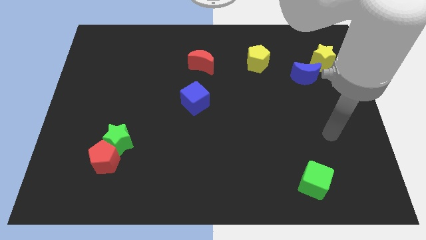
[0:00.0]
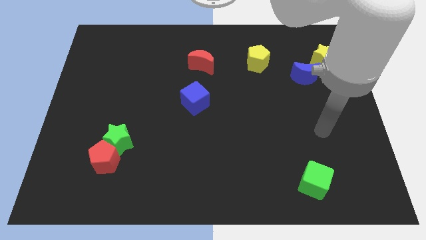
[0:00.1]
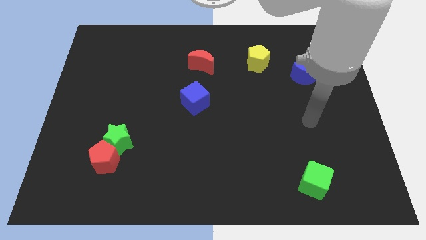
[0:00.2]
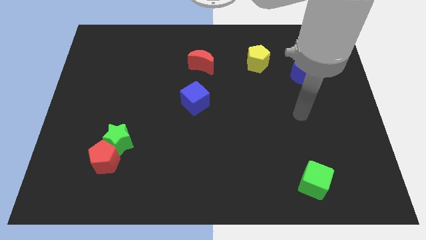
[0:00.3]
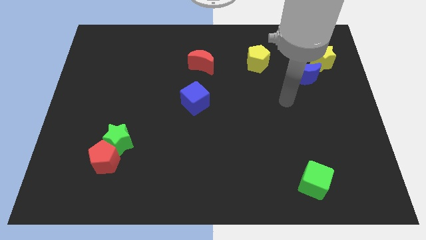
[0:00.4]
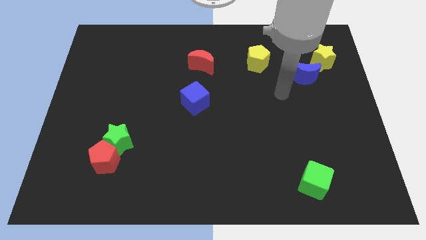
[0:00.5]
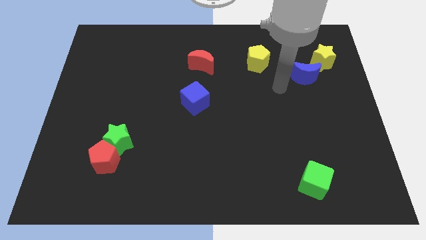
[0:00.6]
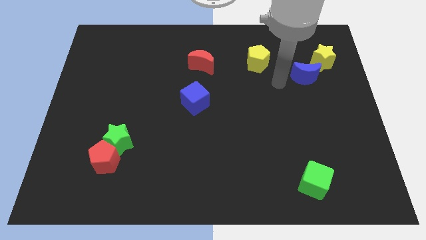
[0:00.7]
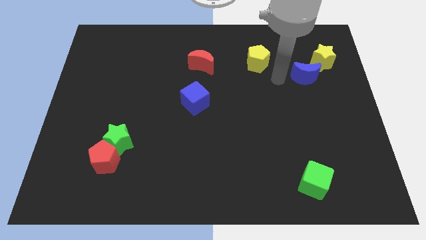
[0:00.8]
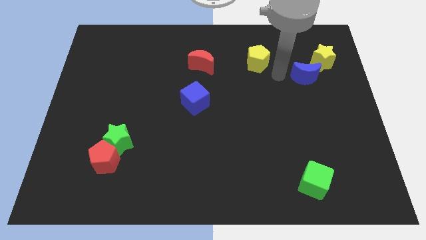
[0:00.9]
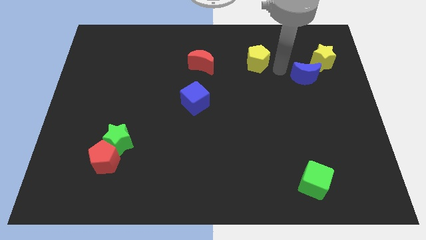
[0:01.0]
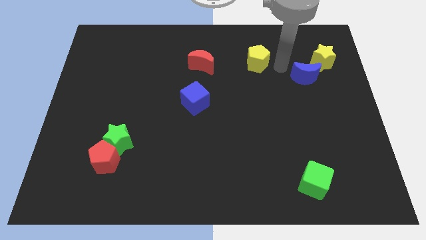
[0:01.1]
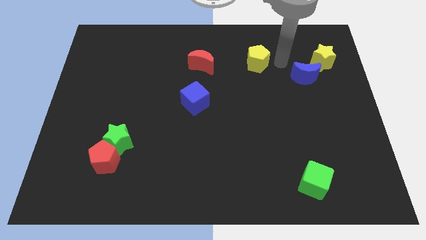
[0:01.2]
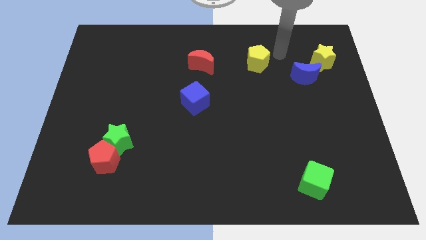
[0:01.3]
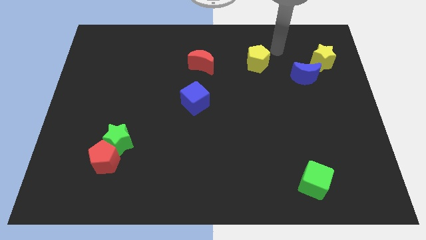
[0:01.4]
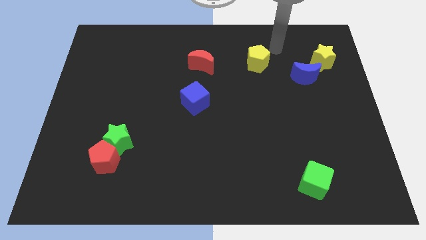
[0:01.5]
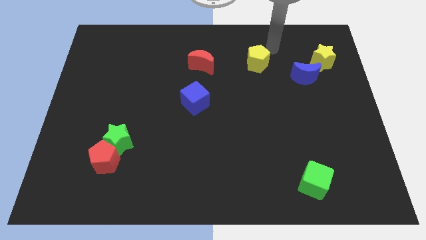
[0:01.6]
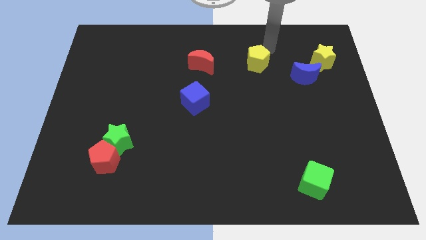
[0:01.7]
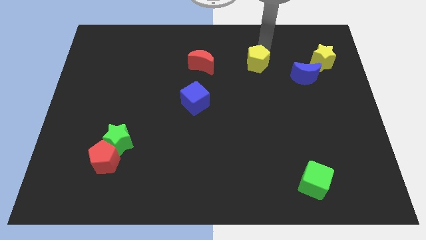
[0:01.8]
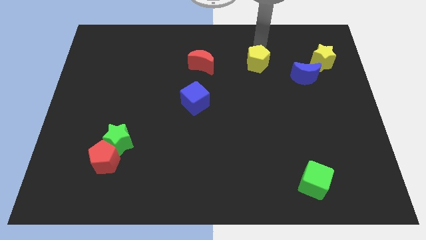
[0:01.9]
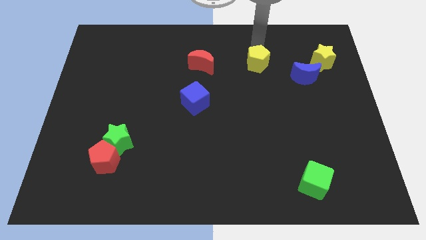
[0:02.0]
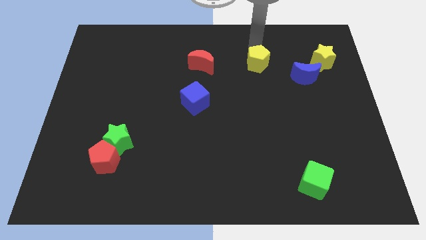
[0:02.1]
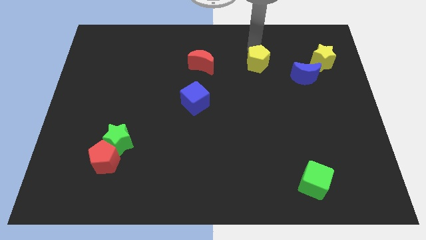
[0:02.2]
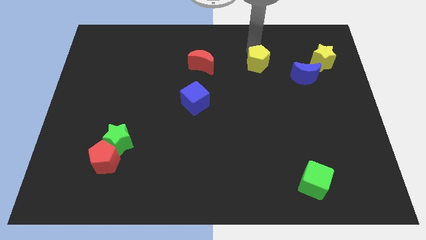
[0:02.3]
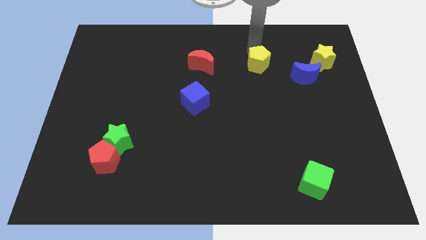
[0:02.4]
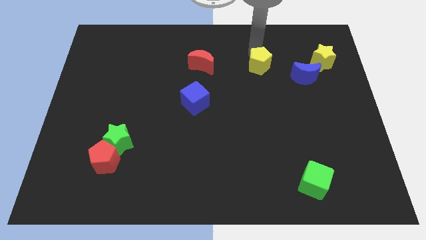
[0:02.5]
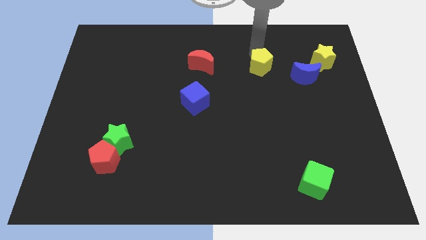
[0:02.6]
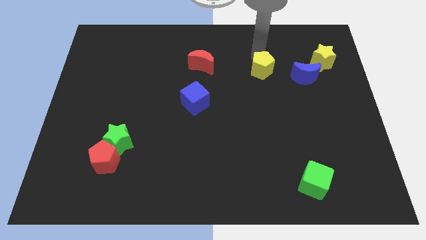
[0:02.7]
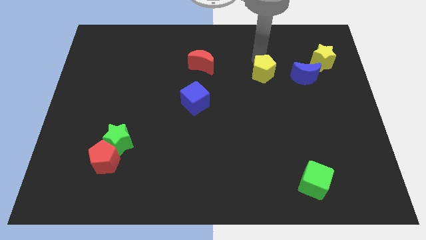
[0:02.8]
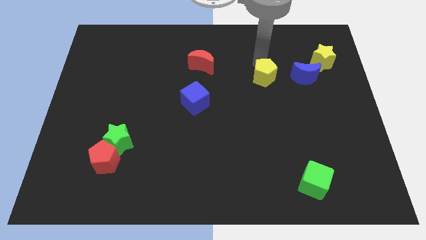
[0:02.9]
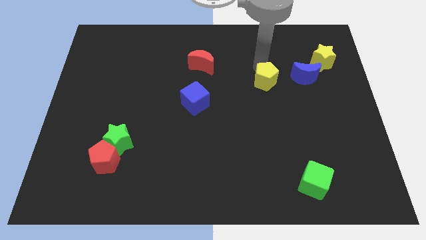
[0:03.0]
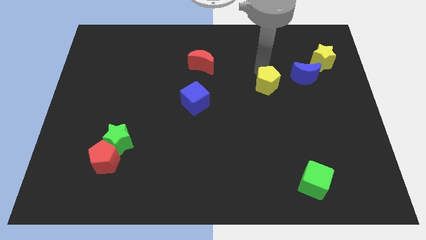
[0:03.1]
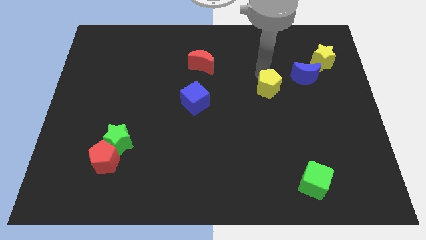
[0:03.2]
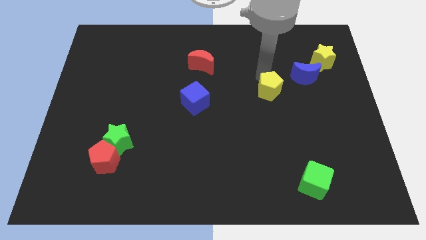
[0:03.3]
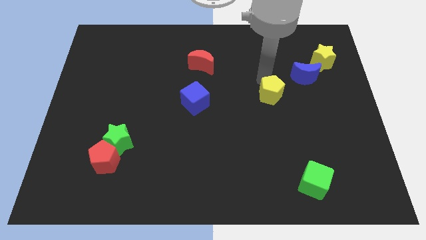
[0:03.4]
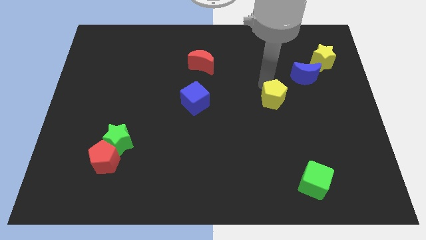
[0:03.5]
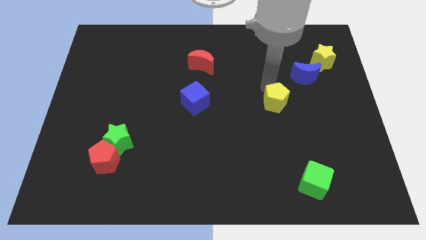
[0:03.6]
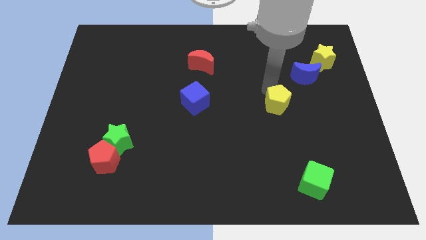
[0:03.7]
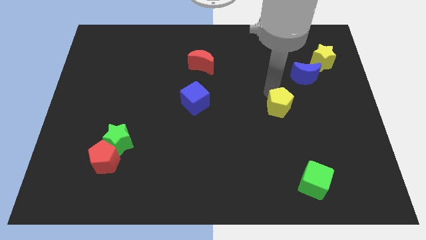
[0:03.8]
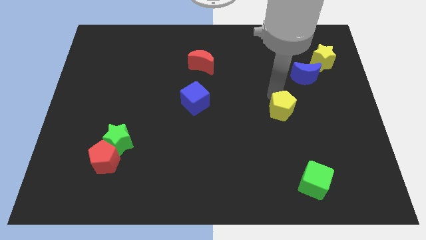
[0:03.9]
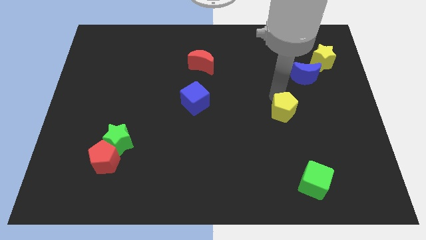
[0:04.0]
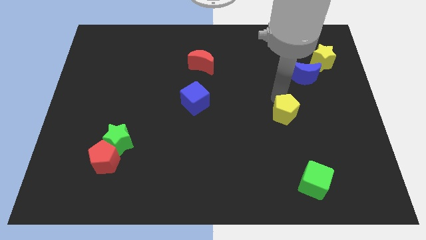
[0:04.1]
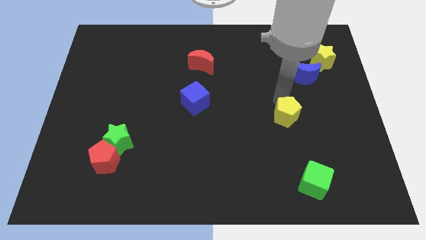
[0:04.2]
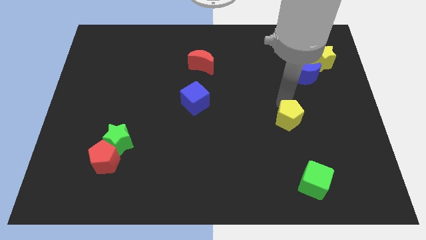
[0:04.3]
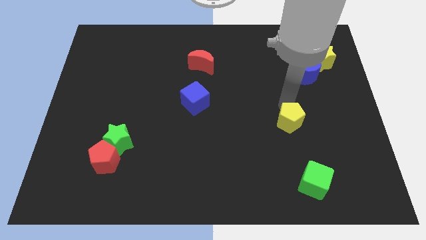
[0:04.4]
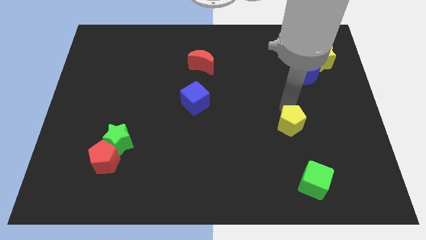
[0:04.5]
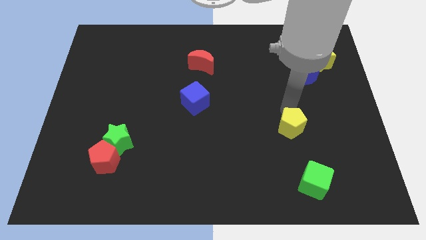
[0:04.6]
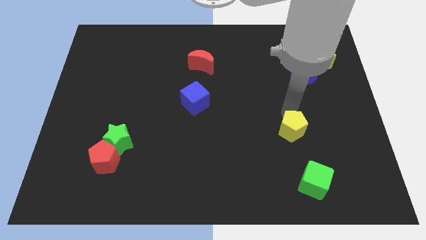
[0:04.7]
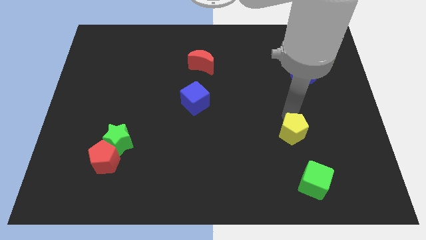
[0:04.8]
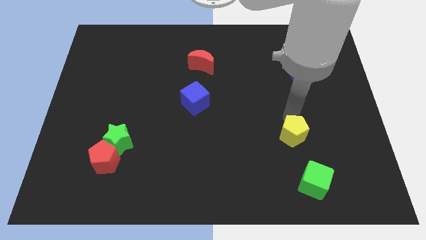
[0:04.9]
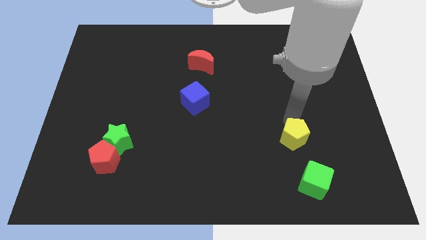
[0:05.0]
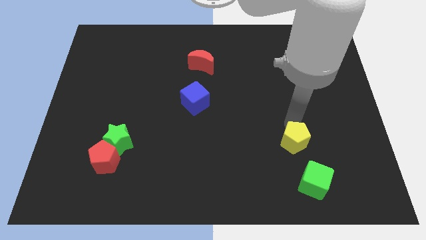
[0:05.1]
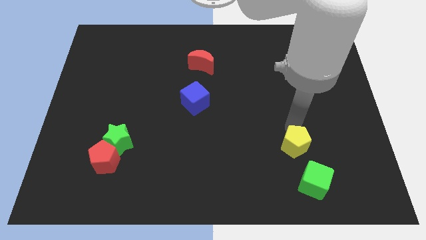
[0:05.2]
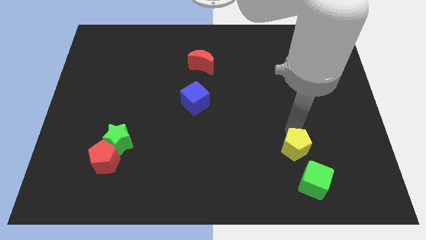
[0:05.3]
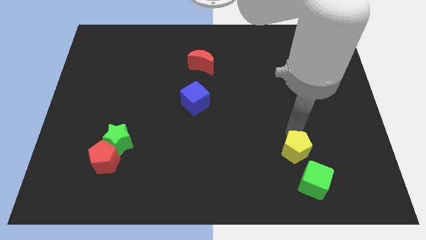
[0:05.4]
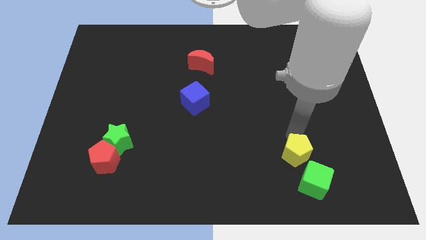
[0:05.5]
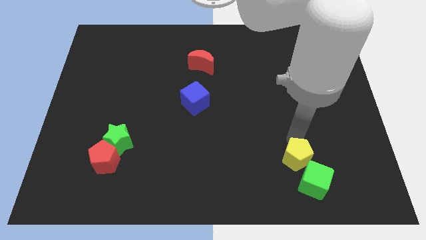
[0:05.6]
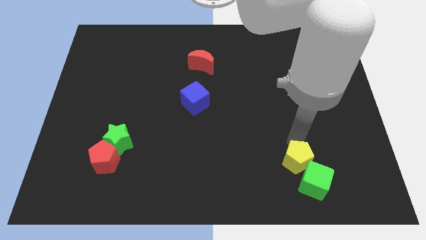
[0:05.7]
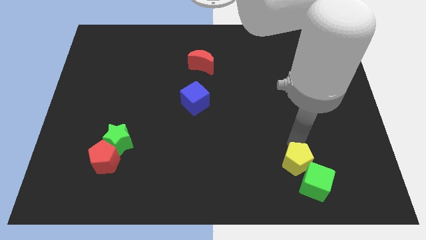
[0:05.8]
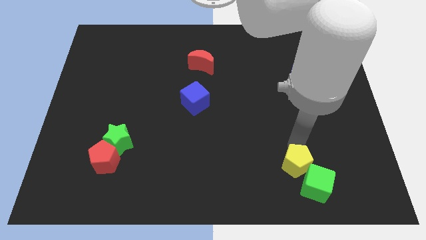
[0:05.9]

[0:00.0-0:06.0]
put the yellow pentagon close to the green cube

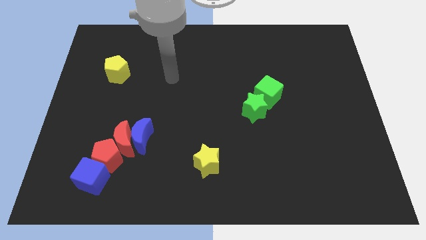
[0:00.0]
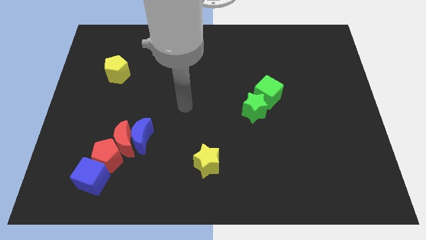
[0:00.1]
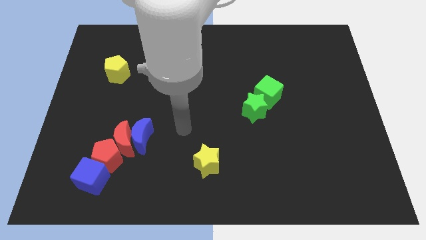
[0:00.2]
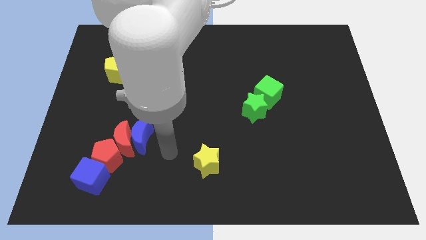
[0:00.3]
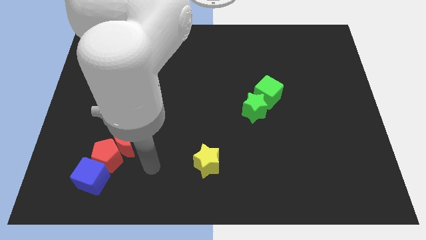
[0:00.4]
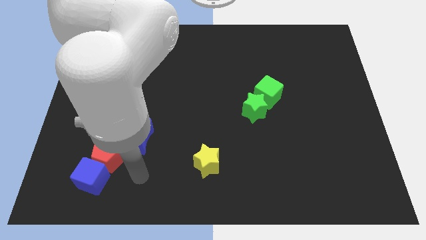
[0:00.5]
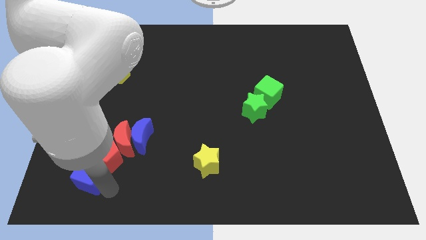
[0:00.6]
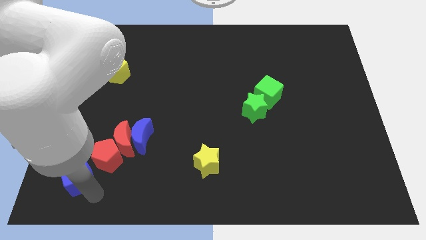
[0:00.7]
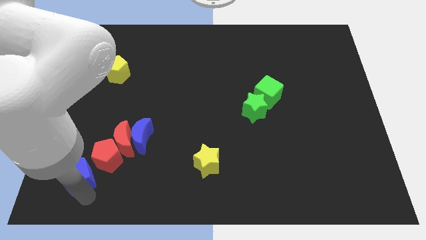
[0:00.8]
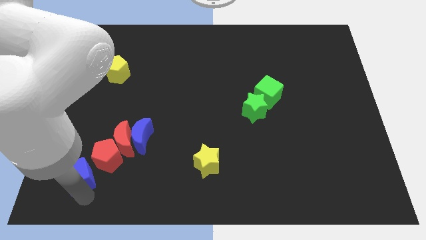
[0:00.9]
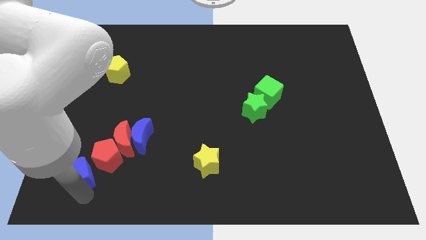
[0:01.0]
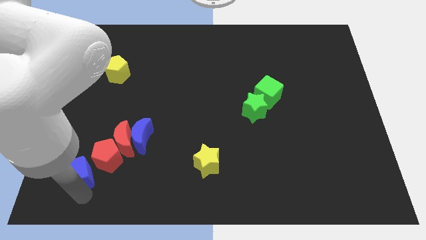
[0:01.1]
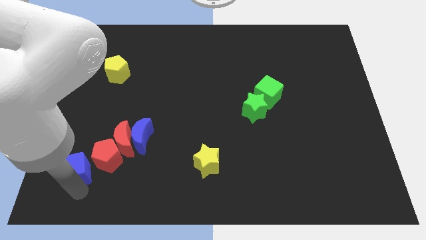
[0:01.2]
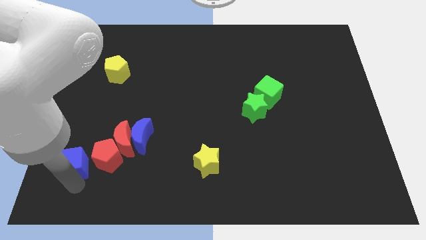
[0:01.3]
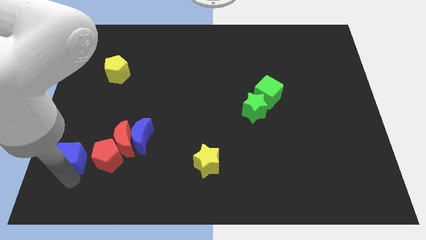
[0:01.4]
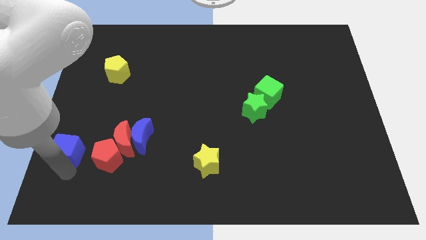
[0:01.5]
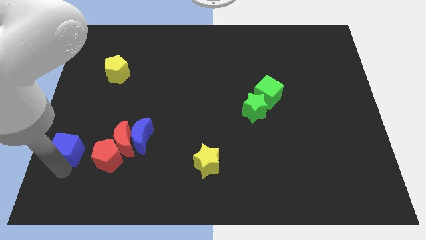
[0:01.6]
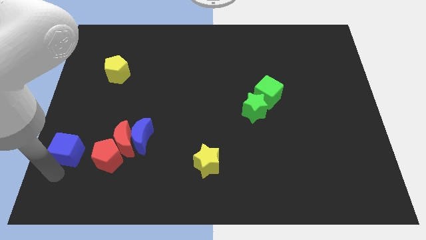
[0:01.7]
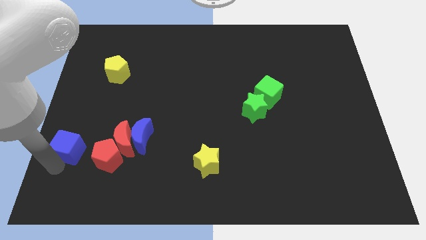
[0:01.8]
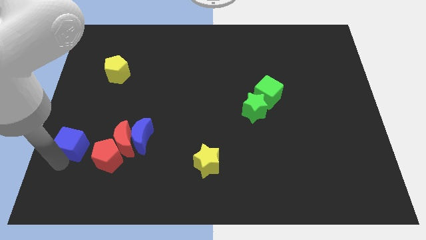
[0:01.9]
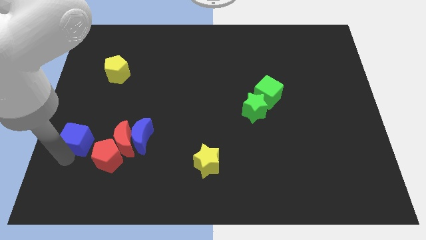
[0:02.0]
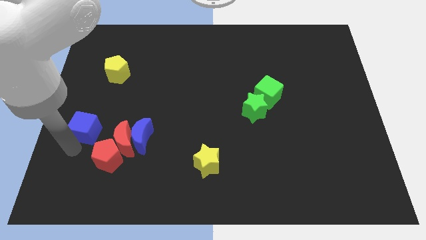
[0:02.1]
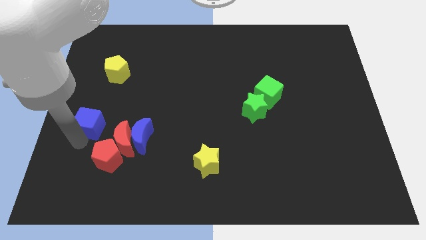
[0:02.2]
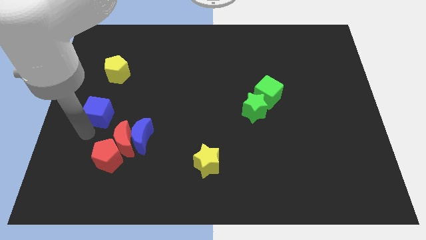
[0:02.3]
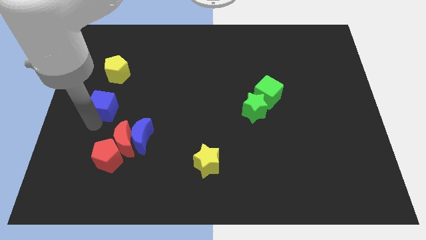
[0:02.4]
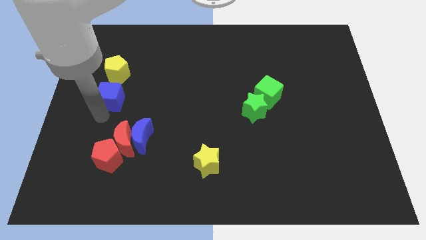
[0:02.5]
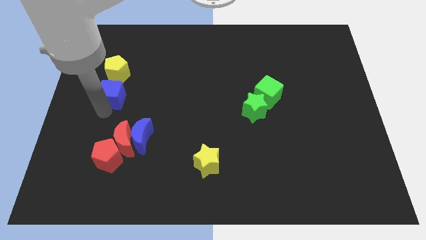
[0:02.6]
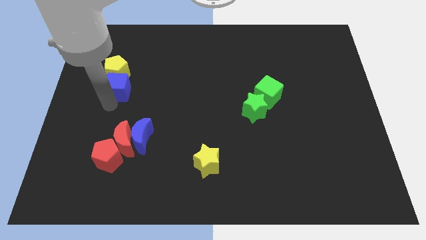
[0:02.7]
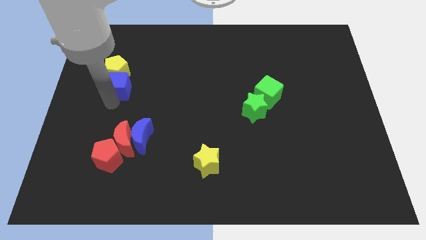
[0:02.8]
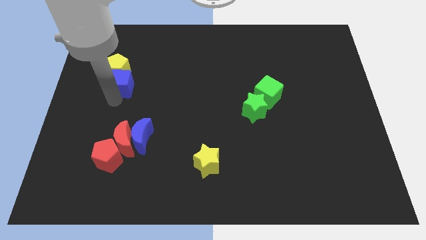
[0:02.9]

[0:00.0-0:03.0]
move the blue cube close to the yellow pentagon
